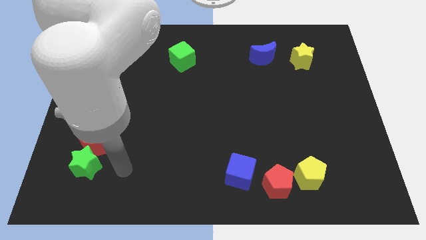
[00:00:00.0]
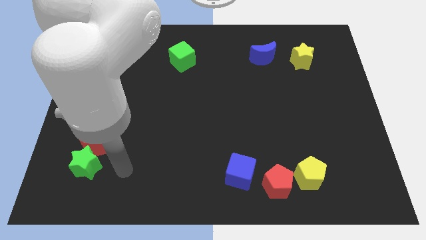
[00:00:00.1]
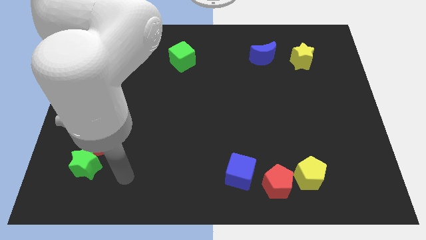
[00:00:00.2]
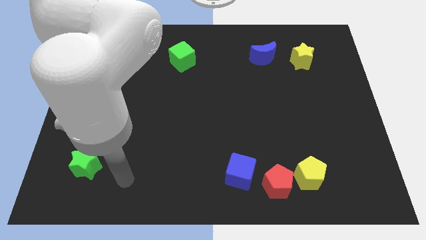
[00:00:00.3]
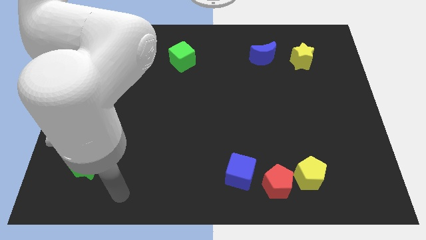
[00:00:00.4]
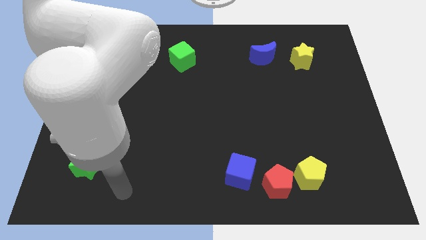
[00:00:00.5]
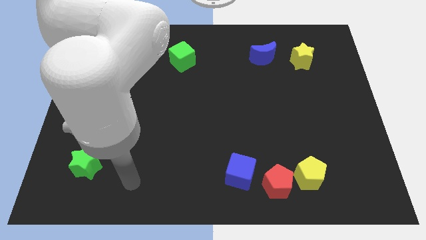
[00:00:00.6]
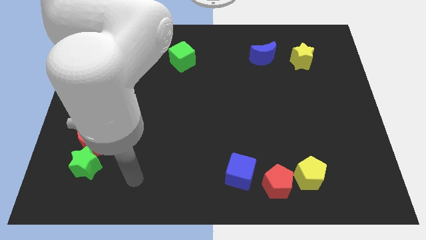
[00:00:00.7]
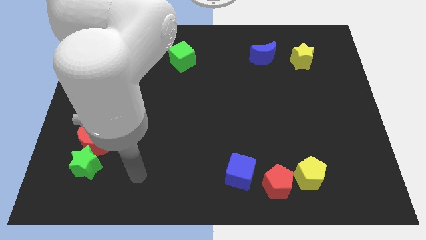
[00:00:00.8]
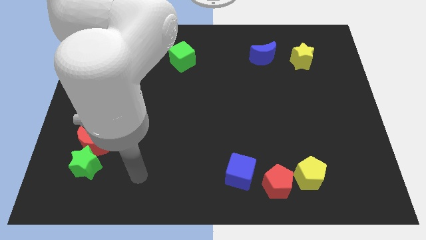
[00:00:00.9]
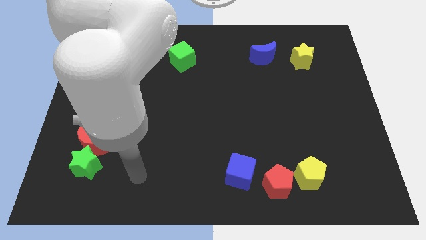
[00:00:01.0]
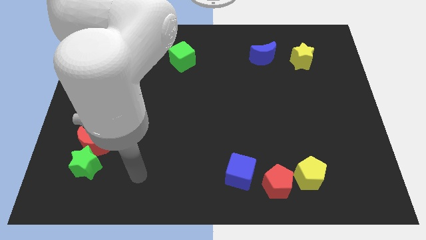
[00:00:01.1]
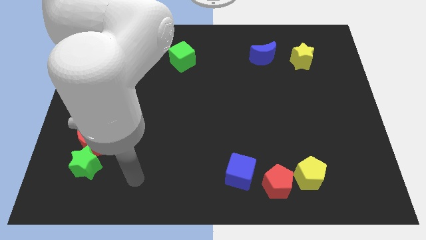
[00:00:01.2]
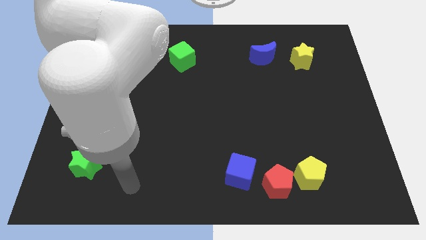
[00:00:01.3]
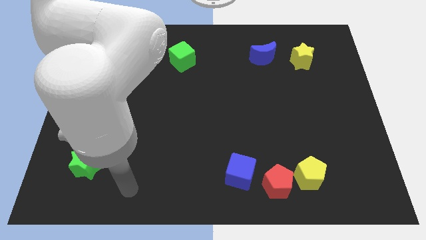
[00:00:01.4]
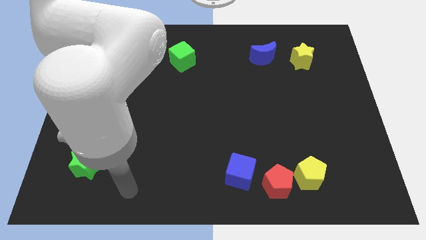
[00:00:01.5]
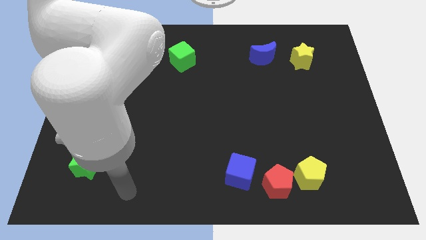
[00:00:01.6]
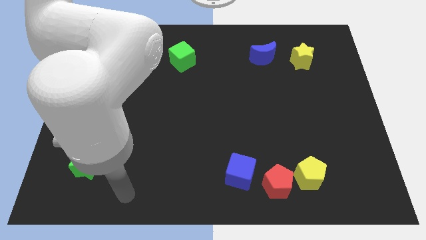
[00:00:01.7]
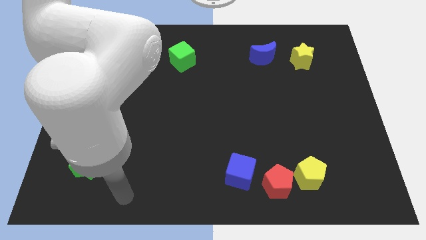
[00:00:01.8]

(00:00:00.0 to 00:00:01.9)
move your arm towards the bottom left of the board

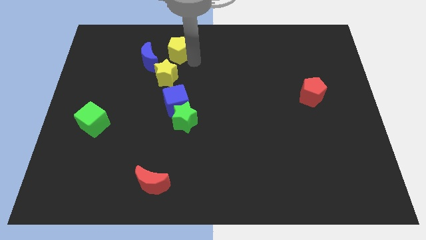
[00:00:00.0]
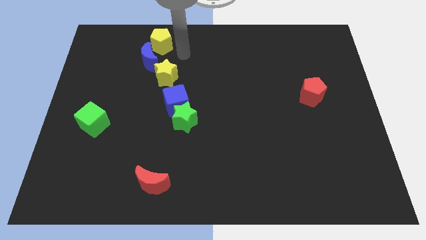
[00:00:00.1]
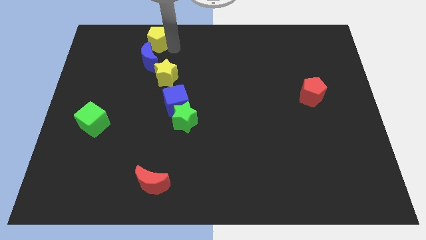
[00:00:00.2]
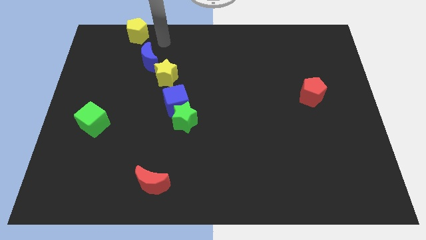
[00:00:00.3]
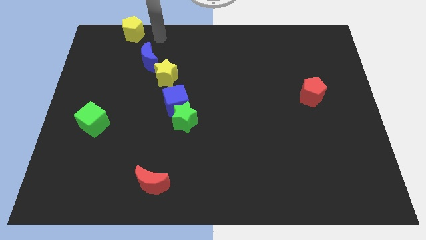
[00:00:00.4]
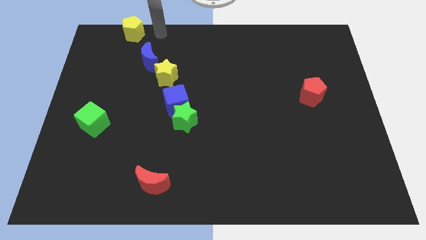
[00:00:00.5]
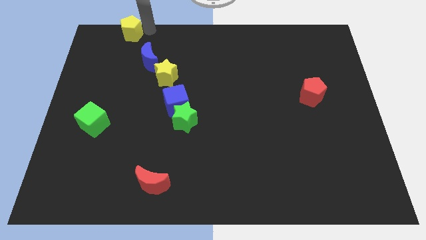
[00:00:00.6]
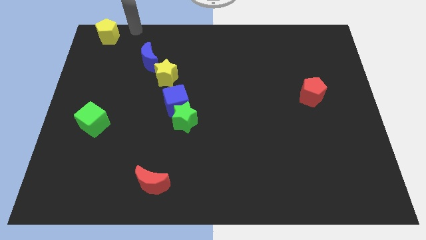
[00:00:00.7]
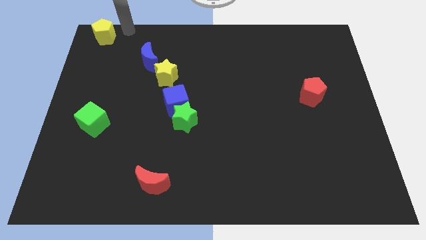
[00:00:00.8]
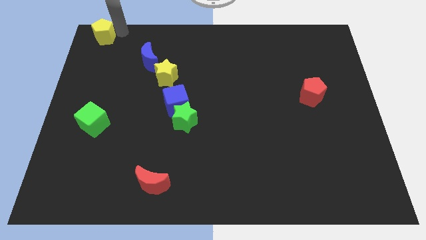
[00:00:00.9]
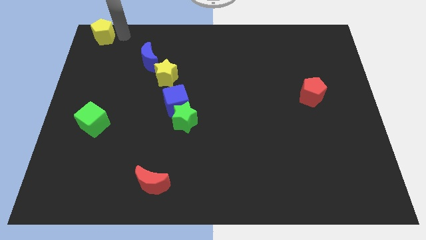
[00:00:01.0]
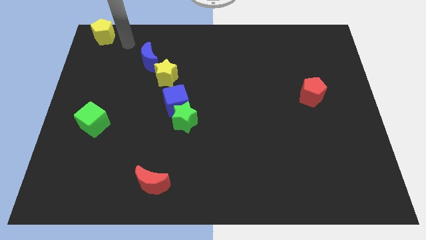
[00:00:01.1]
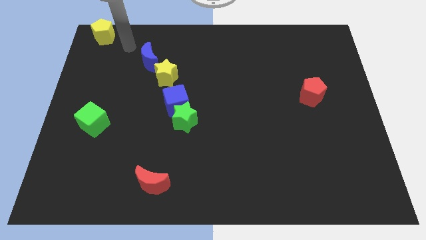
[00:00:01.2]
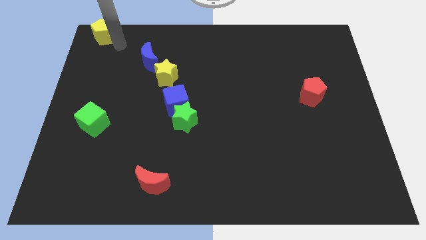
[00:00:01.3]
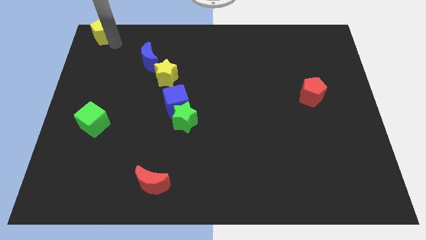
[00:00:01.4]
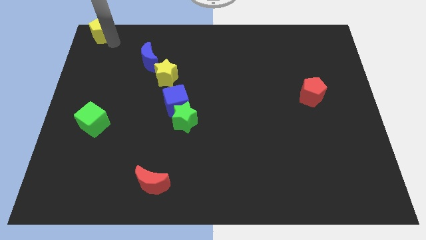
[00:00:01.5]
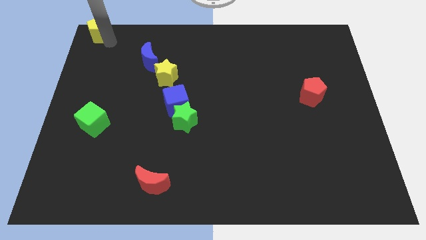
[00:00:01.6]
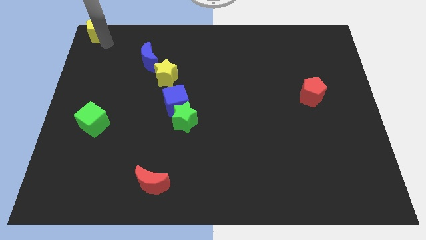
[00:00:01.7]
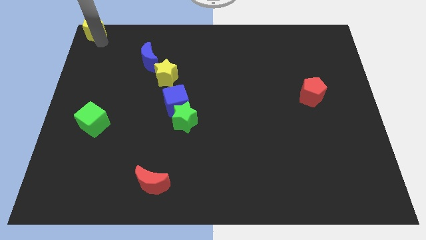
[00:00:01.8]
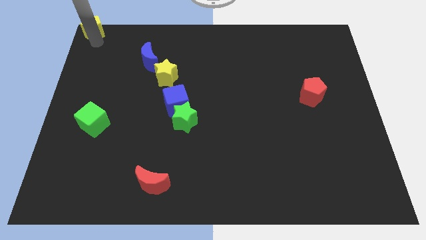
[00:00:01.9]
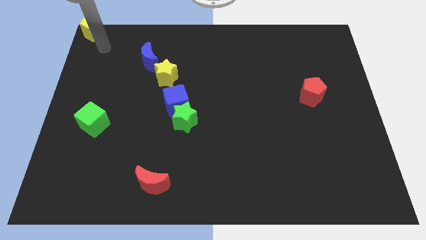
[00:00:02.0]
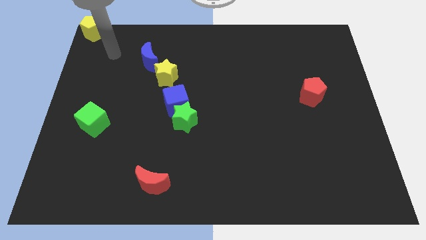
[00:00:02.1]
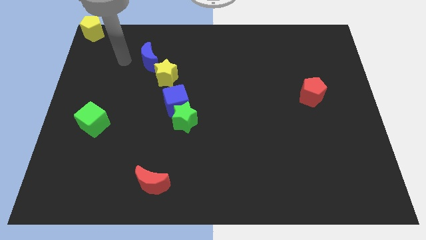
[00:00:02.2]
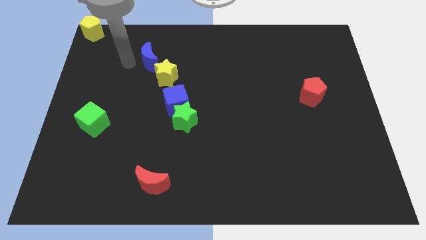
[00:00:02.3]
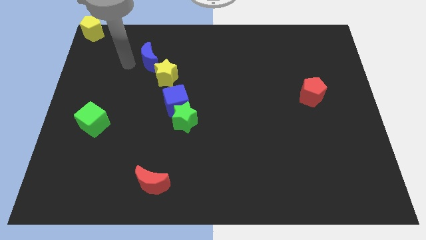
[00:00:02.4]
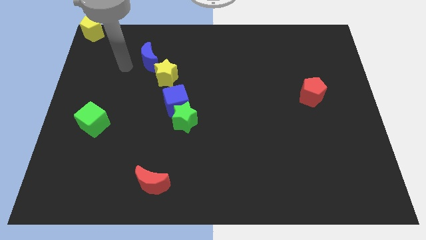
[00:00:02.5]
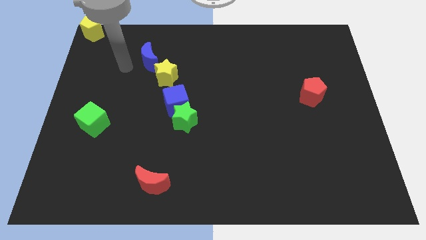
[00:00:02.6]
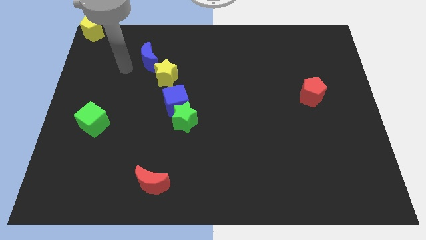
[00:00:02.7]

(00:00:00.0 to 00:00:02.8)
push the yellow pentagon to the top left corner of the board

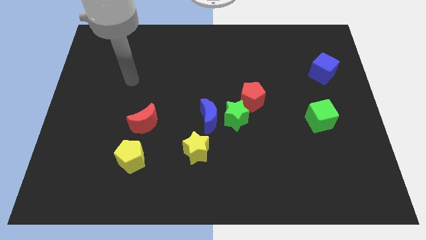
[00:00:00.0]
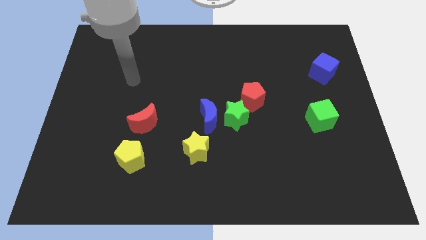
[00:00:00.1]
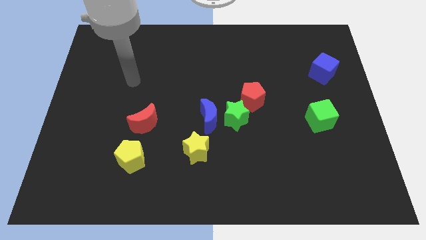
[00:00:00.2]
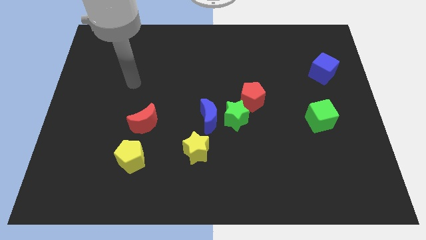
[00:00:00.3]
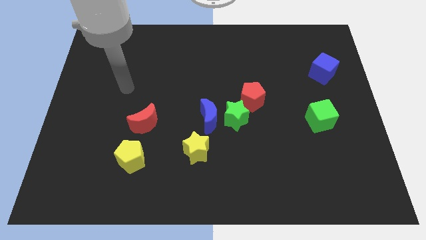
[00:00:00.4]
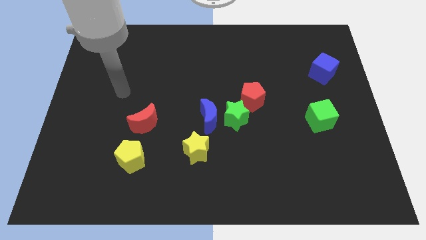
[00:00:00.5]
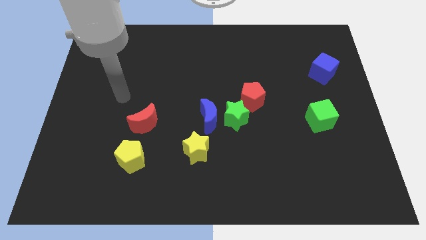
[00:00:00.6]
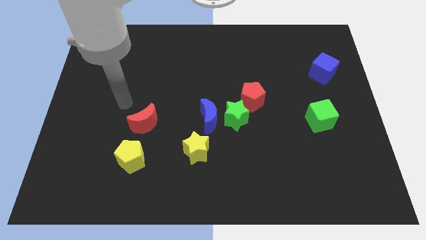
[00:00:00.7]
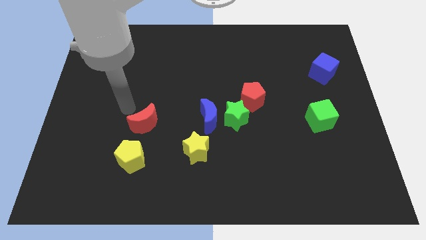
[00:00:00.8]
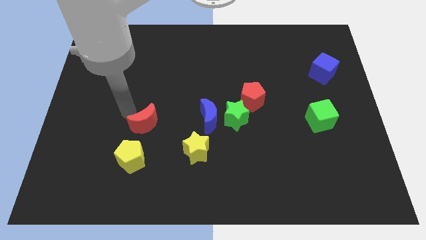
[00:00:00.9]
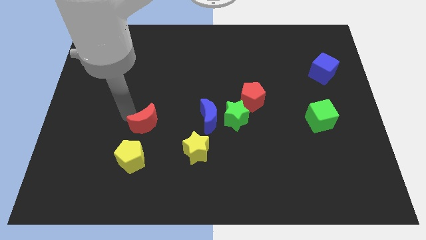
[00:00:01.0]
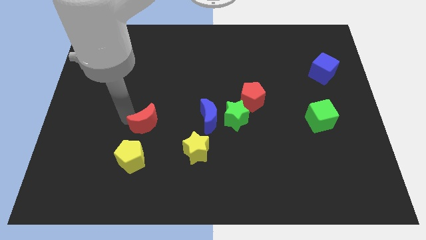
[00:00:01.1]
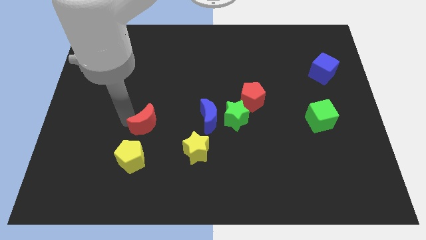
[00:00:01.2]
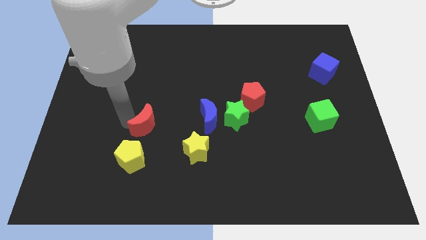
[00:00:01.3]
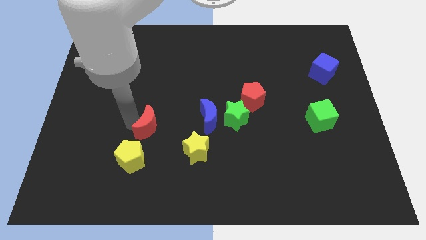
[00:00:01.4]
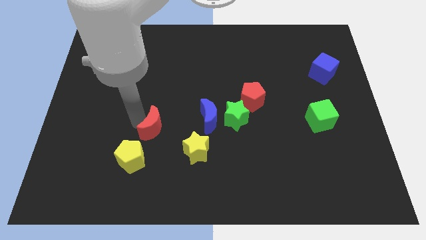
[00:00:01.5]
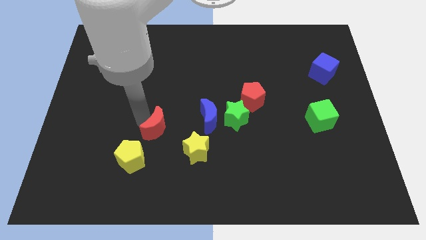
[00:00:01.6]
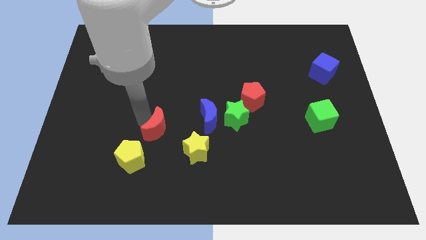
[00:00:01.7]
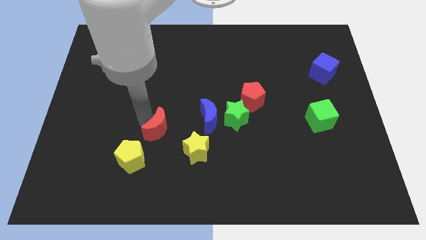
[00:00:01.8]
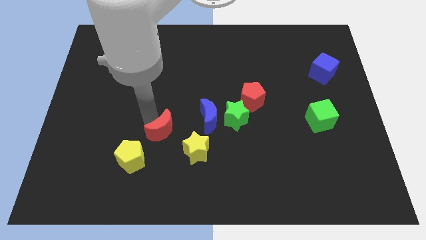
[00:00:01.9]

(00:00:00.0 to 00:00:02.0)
push the red crescent slightly to the right of the board

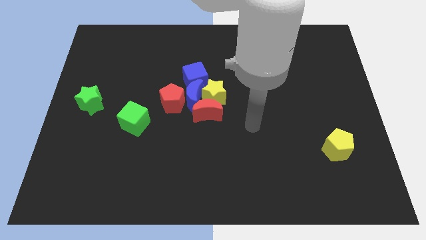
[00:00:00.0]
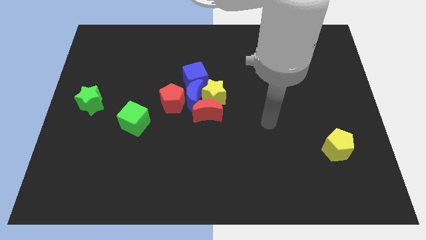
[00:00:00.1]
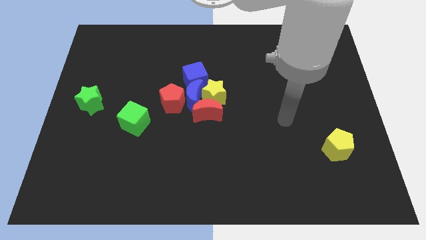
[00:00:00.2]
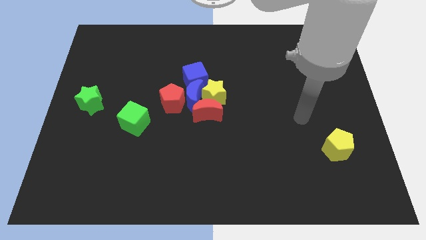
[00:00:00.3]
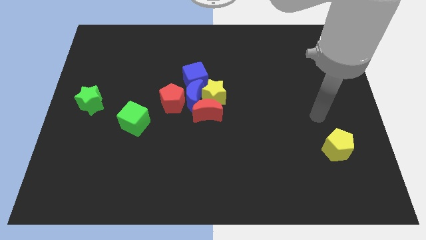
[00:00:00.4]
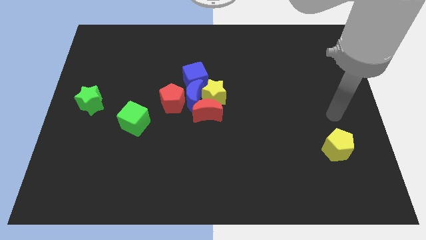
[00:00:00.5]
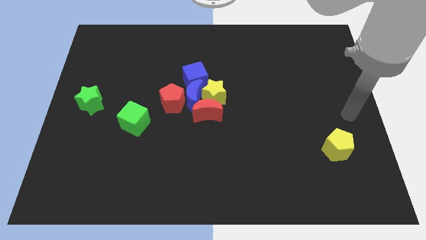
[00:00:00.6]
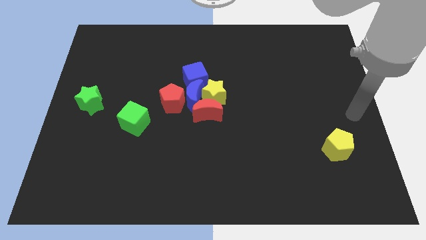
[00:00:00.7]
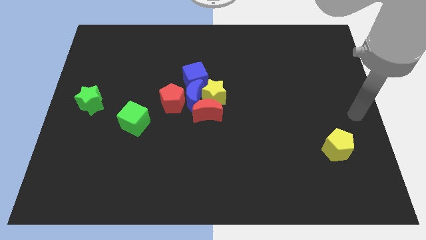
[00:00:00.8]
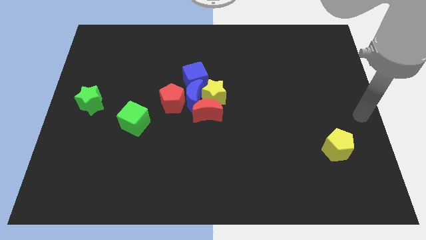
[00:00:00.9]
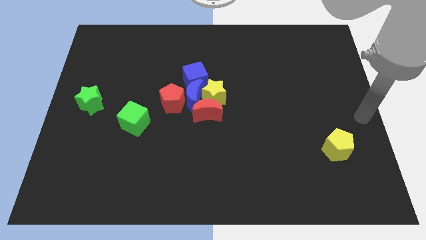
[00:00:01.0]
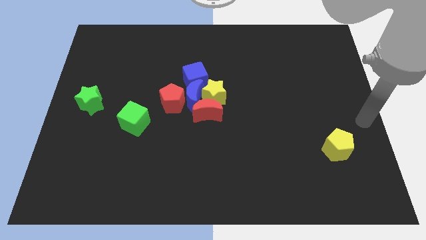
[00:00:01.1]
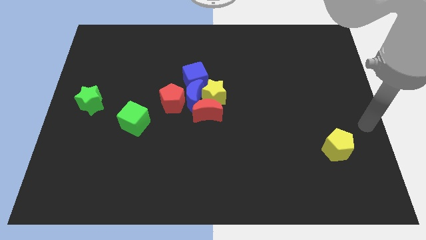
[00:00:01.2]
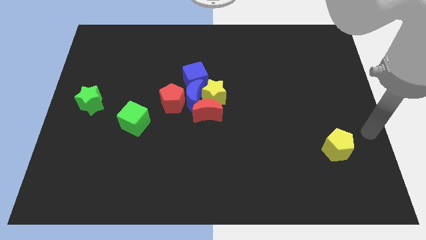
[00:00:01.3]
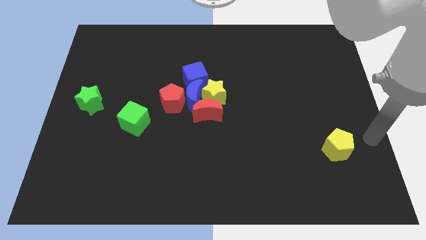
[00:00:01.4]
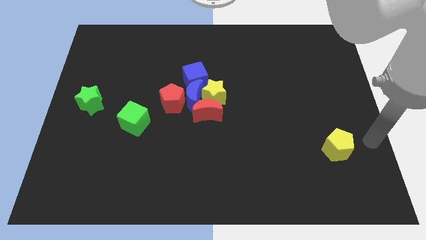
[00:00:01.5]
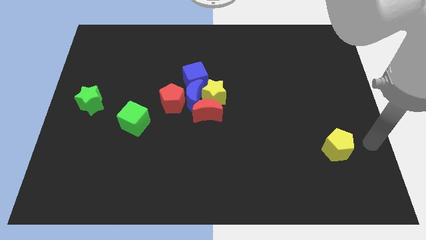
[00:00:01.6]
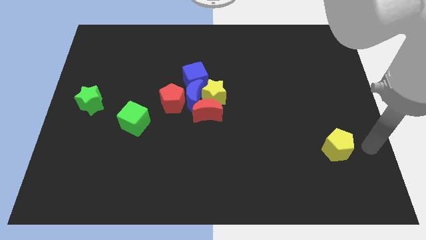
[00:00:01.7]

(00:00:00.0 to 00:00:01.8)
place your arm at the right of the yellow pentagon

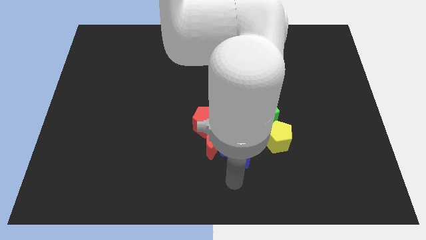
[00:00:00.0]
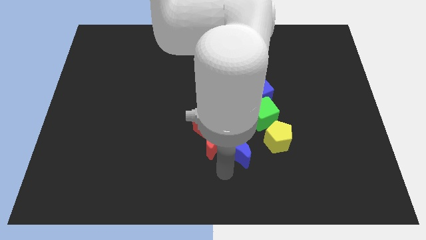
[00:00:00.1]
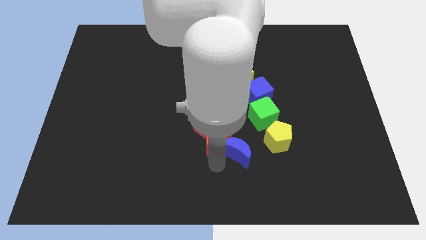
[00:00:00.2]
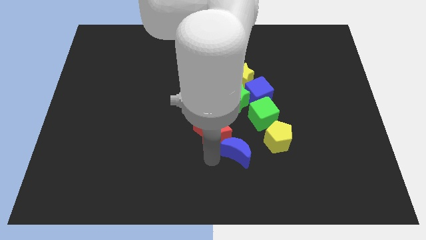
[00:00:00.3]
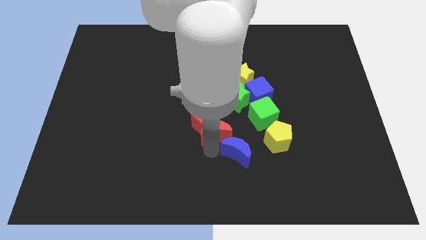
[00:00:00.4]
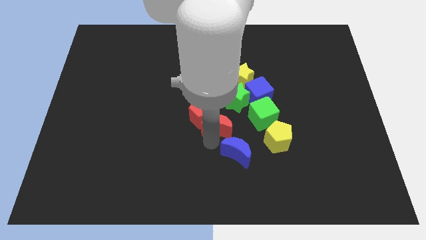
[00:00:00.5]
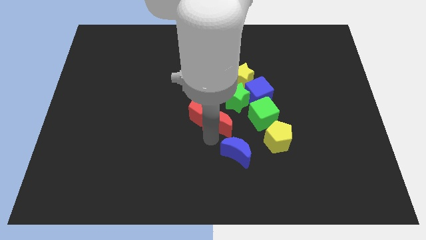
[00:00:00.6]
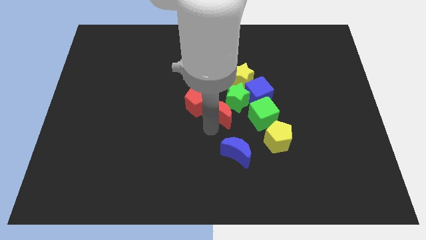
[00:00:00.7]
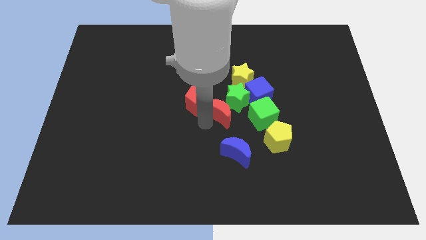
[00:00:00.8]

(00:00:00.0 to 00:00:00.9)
push the red crescent towards the green star
